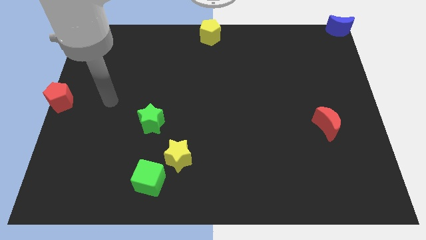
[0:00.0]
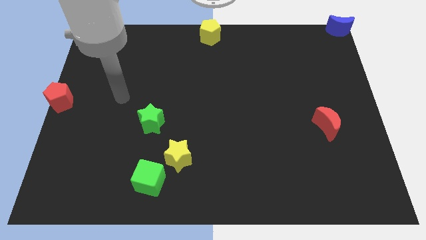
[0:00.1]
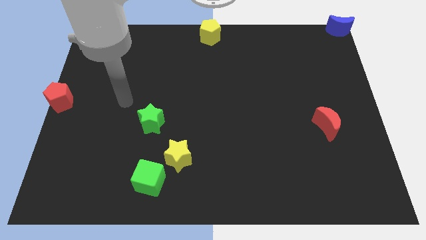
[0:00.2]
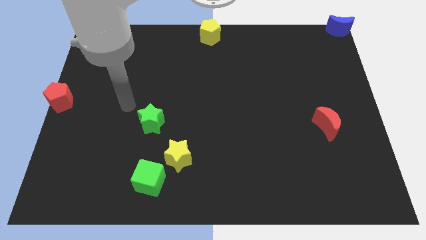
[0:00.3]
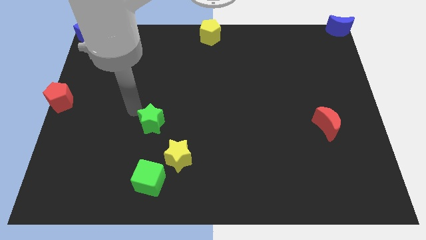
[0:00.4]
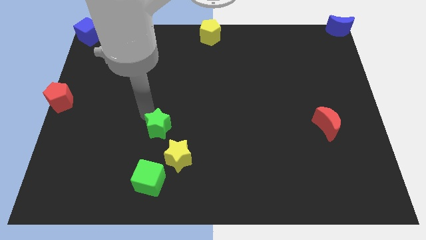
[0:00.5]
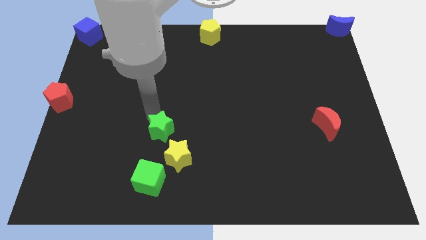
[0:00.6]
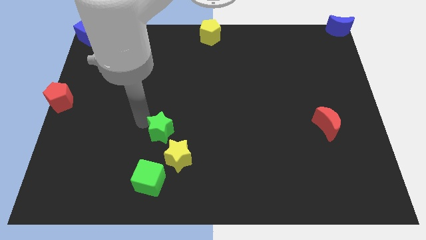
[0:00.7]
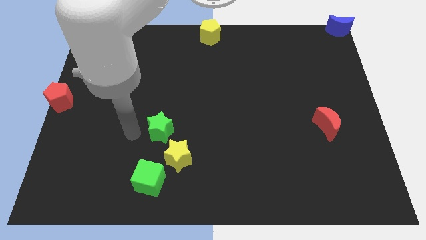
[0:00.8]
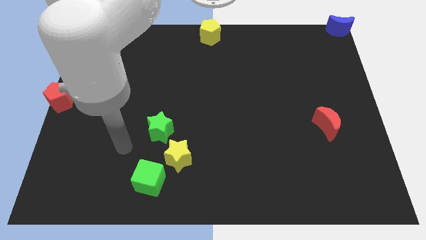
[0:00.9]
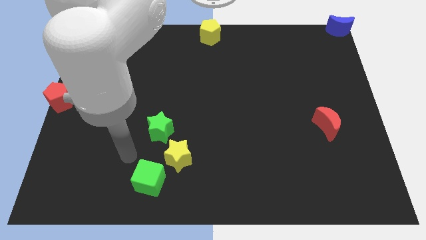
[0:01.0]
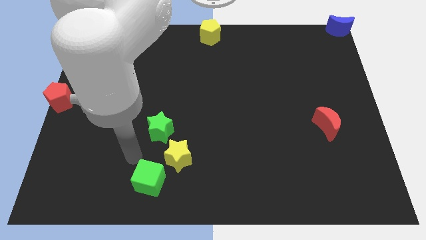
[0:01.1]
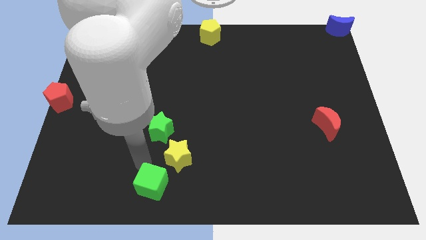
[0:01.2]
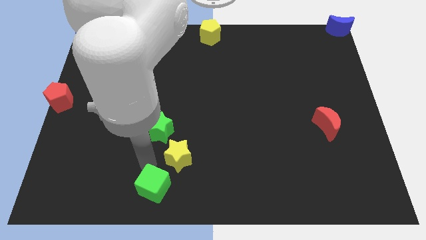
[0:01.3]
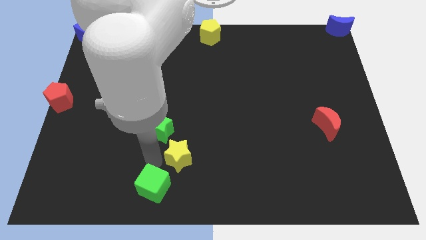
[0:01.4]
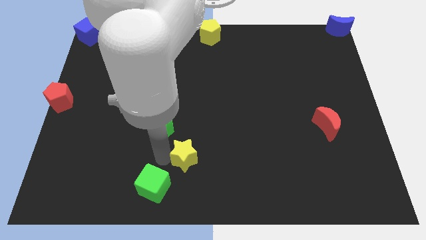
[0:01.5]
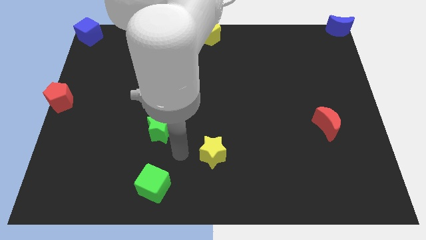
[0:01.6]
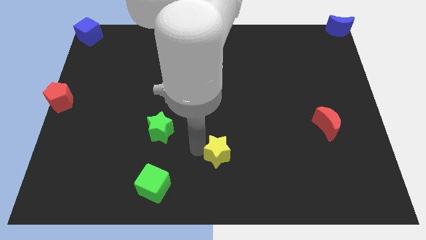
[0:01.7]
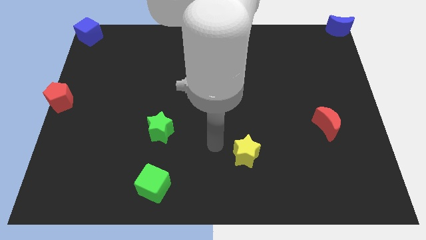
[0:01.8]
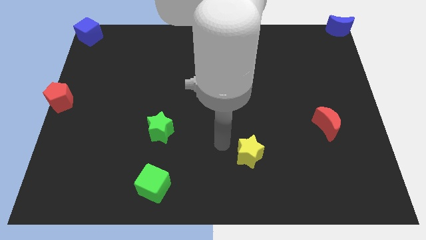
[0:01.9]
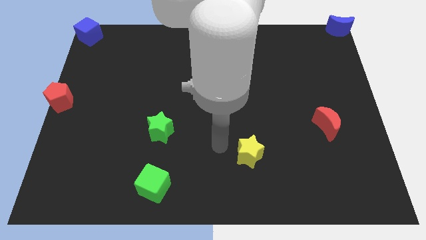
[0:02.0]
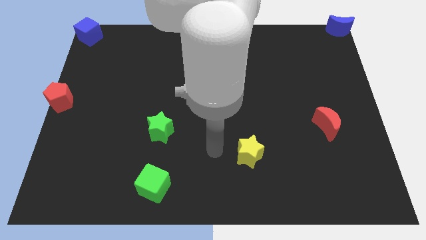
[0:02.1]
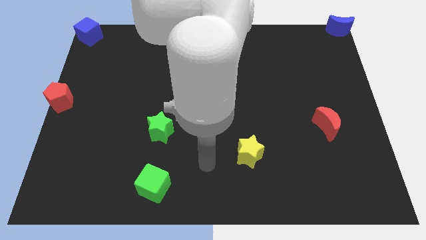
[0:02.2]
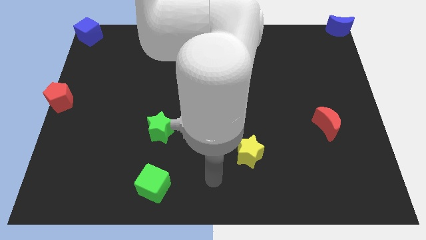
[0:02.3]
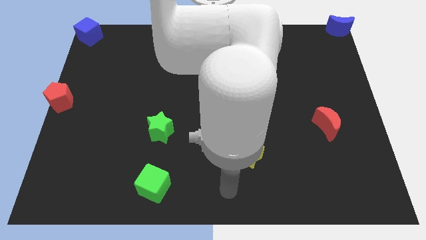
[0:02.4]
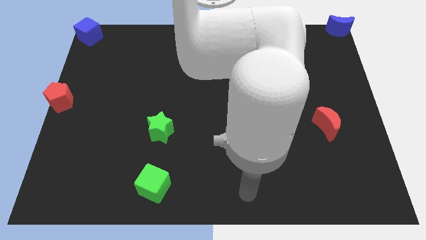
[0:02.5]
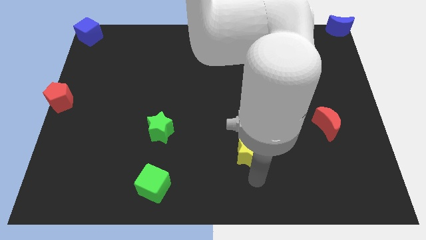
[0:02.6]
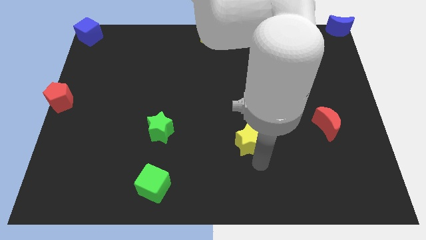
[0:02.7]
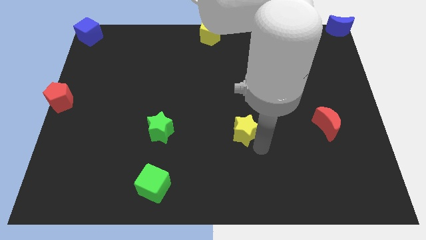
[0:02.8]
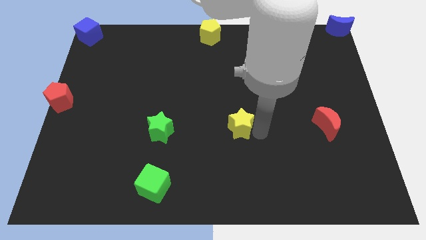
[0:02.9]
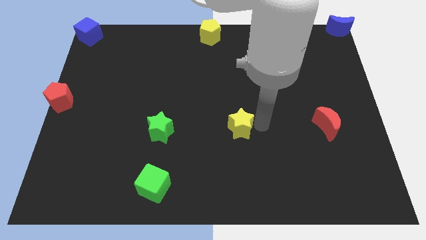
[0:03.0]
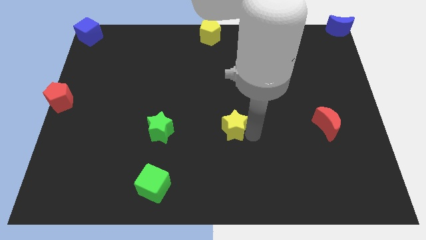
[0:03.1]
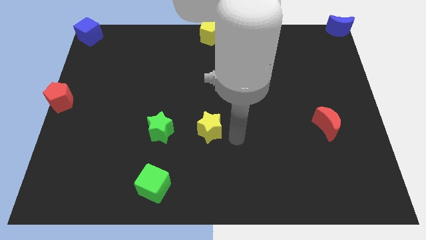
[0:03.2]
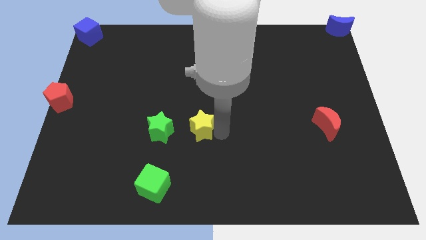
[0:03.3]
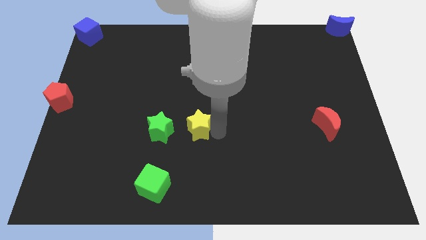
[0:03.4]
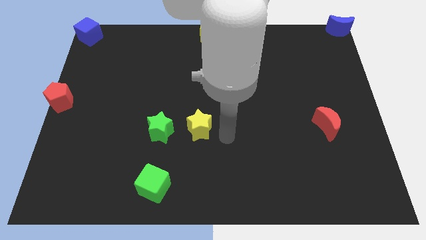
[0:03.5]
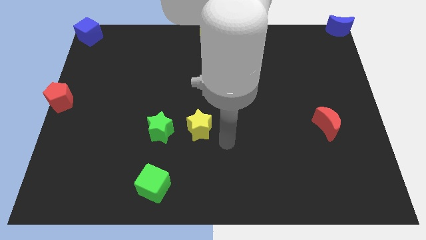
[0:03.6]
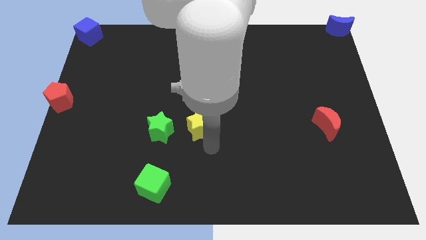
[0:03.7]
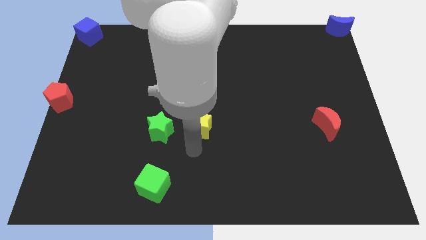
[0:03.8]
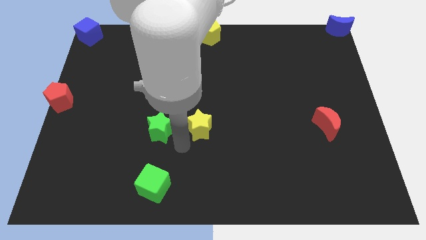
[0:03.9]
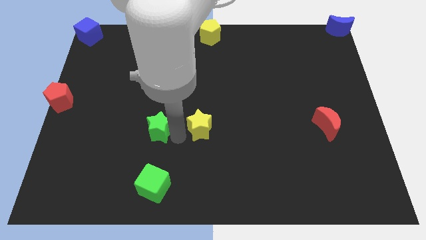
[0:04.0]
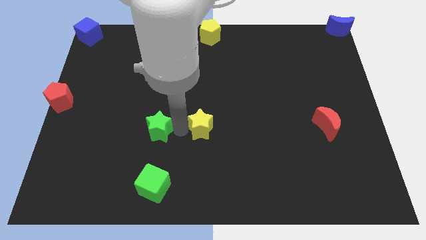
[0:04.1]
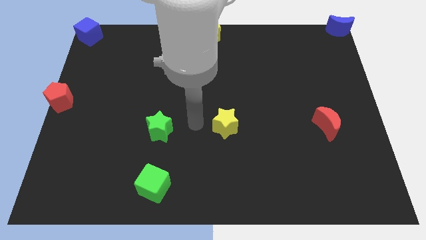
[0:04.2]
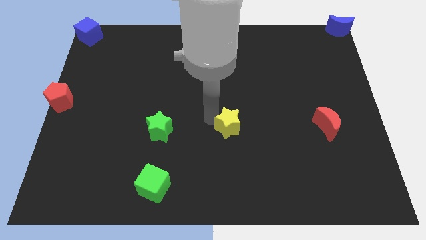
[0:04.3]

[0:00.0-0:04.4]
place the yellow star at the center of the board

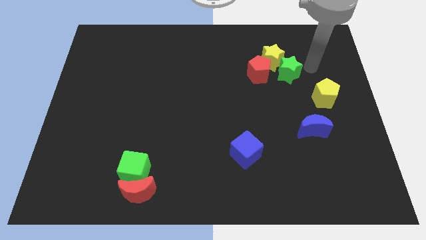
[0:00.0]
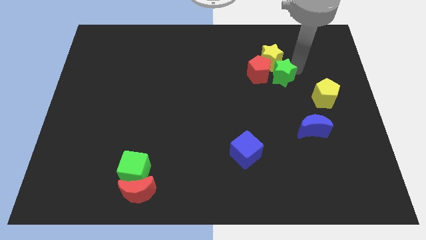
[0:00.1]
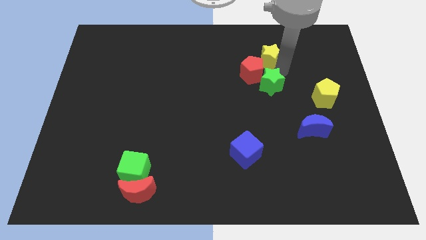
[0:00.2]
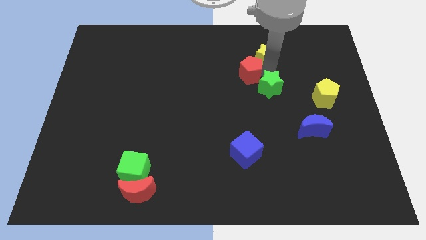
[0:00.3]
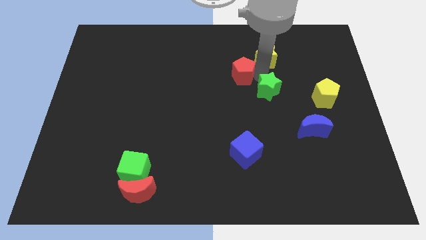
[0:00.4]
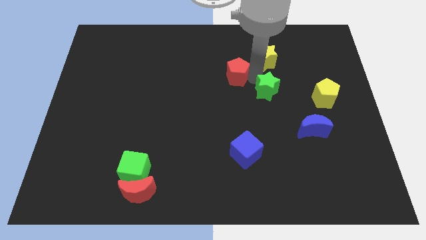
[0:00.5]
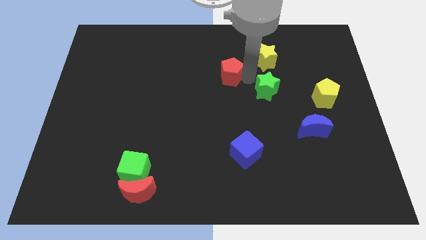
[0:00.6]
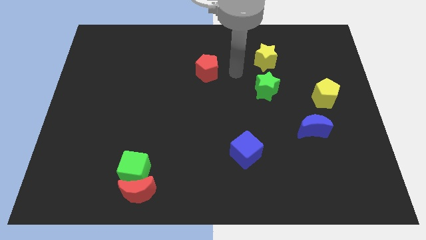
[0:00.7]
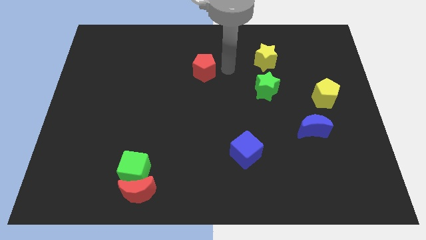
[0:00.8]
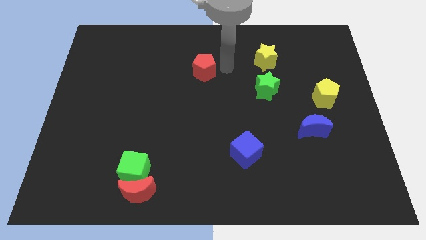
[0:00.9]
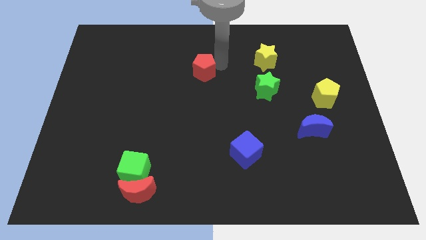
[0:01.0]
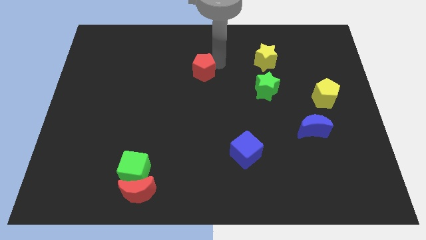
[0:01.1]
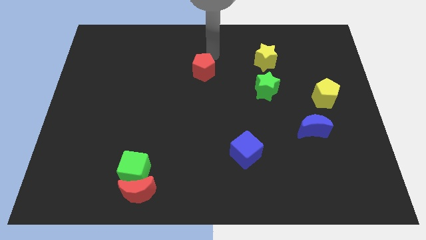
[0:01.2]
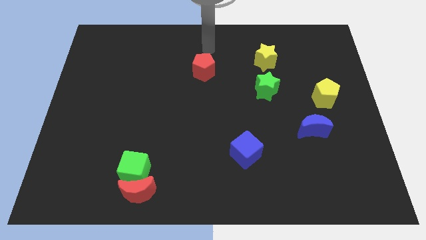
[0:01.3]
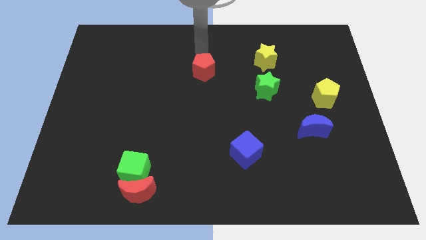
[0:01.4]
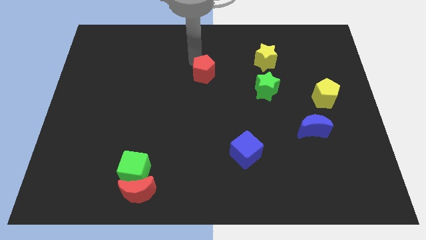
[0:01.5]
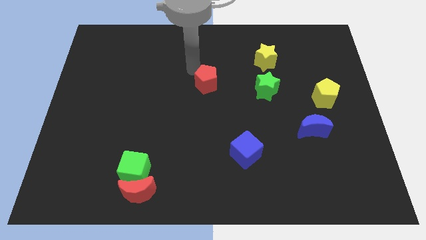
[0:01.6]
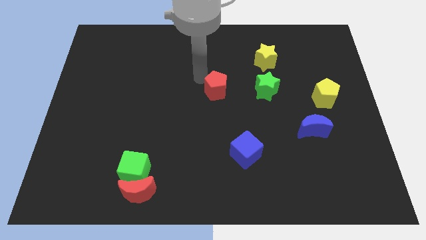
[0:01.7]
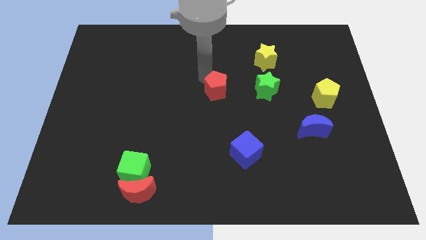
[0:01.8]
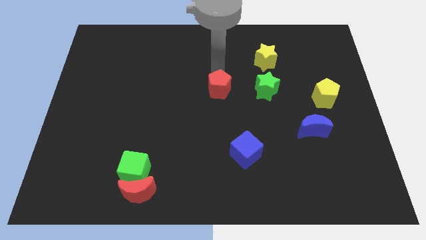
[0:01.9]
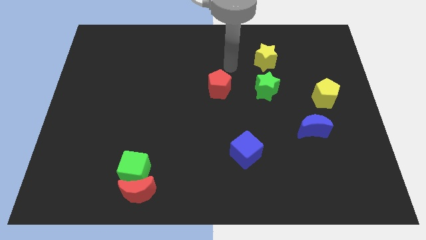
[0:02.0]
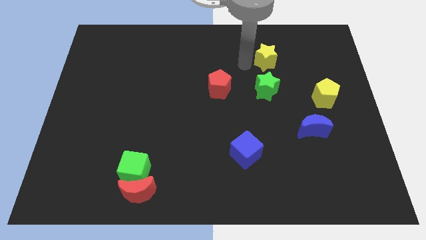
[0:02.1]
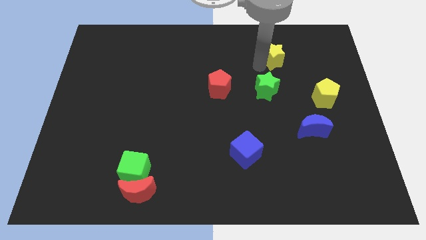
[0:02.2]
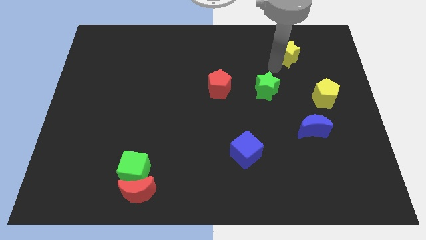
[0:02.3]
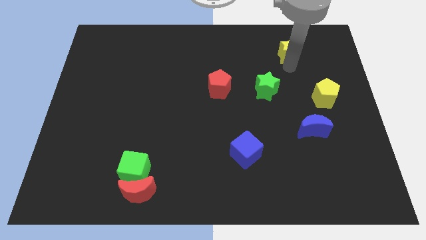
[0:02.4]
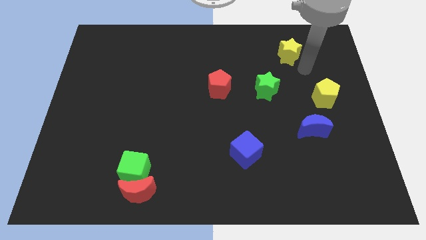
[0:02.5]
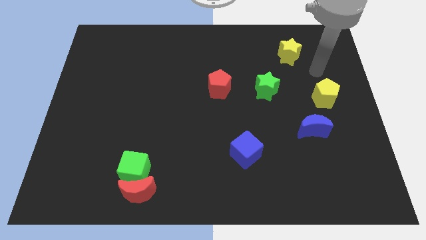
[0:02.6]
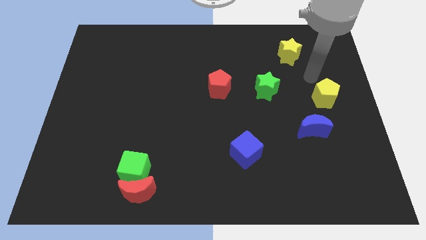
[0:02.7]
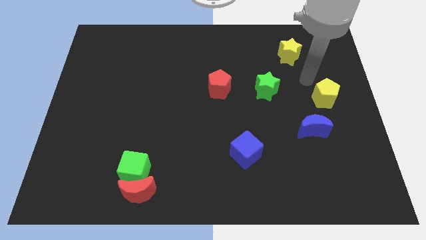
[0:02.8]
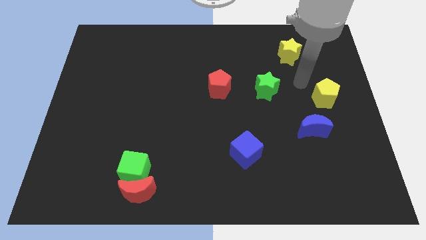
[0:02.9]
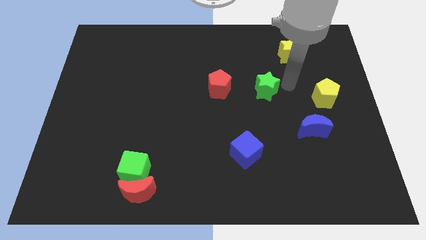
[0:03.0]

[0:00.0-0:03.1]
move red pentagon at the center of the board

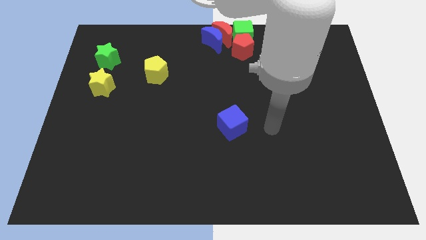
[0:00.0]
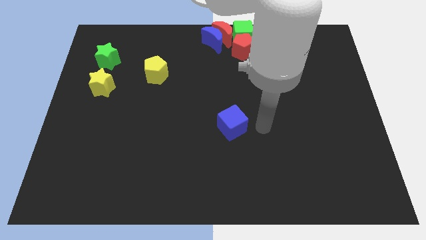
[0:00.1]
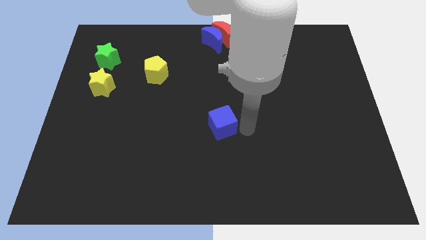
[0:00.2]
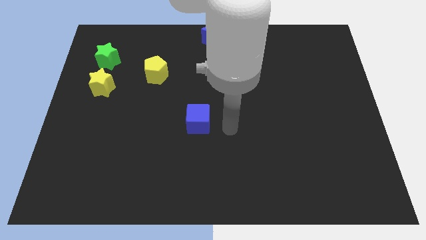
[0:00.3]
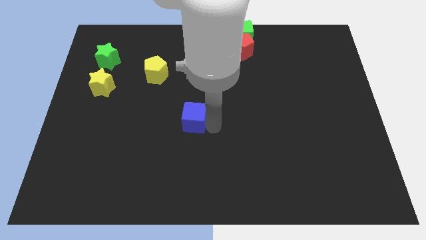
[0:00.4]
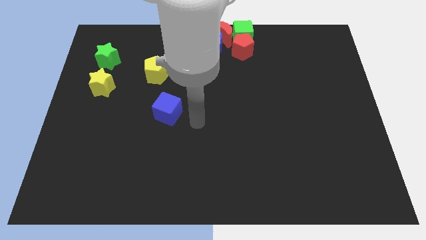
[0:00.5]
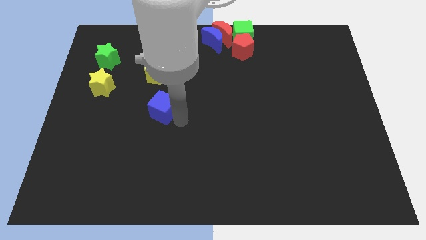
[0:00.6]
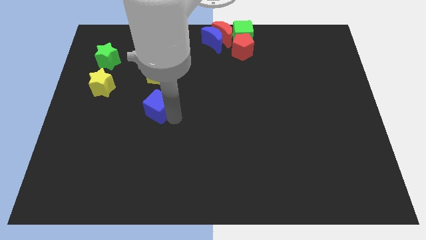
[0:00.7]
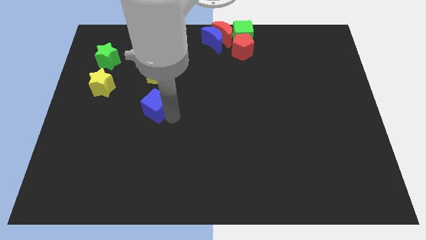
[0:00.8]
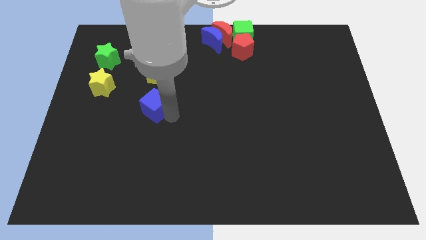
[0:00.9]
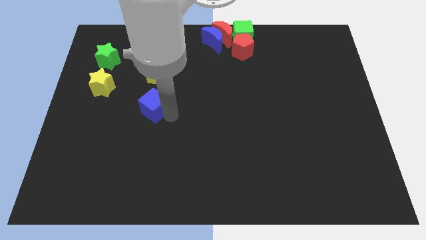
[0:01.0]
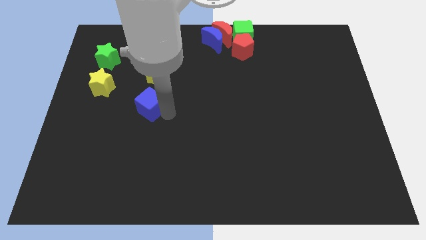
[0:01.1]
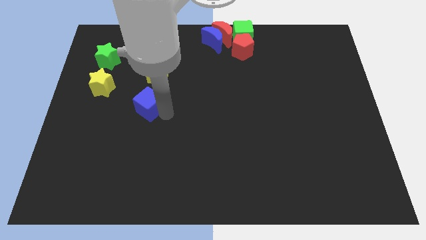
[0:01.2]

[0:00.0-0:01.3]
move the blue cube below the yellow pentagon

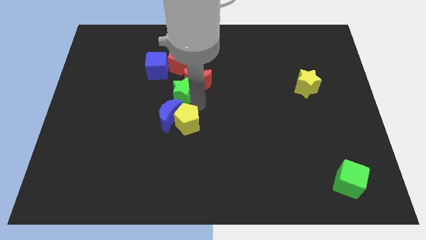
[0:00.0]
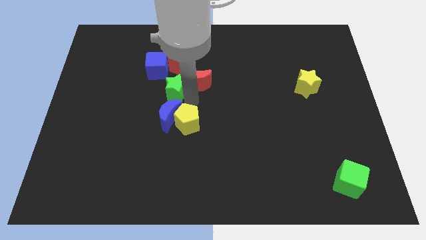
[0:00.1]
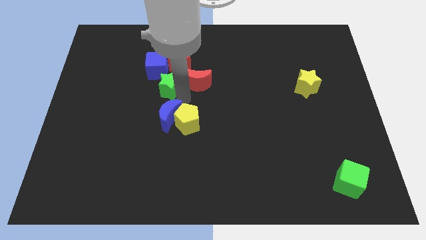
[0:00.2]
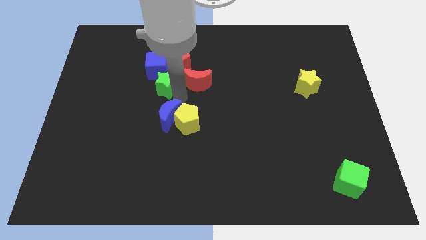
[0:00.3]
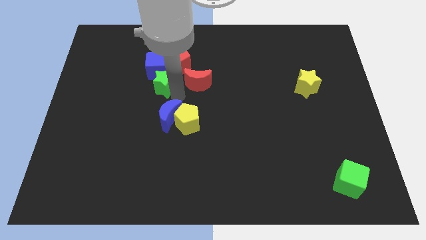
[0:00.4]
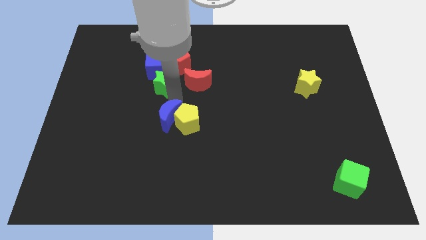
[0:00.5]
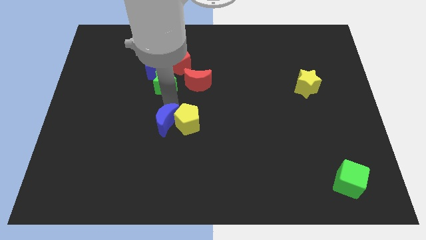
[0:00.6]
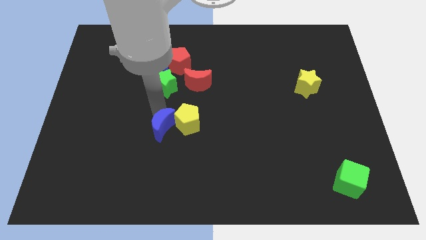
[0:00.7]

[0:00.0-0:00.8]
push the green below the blue cube
